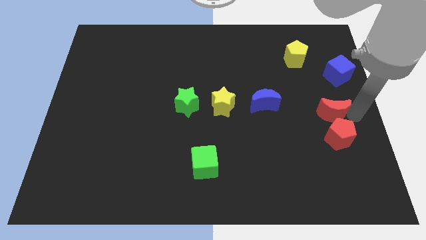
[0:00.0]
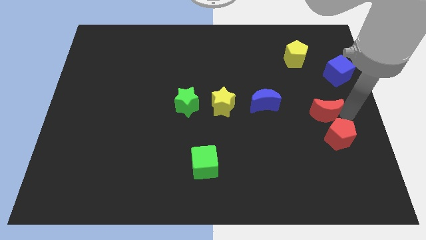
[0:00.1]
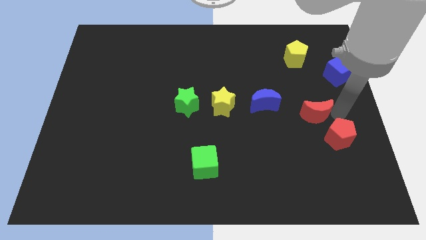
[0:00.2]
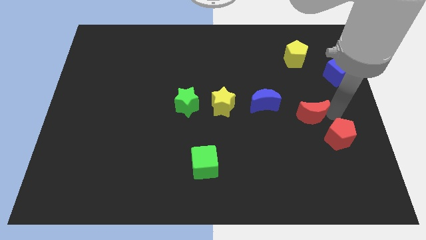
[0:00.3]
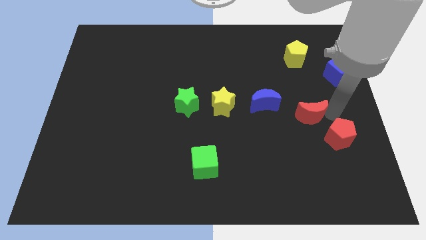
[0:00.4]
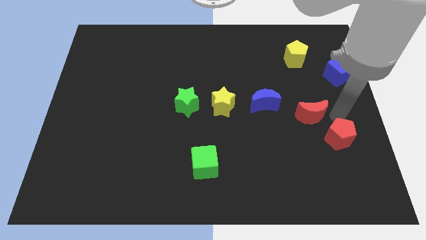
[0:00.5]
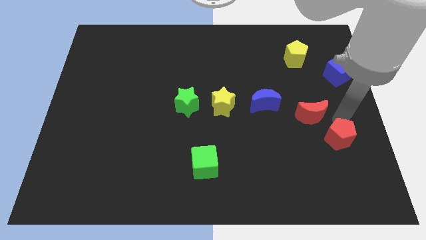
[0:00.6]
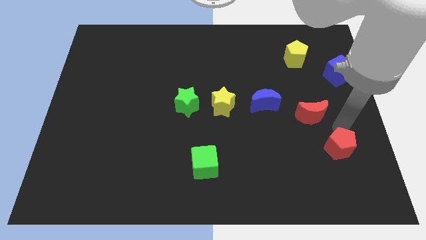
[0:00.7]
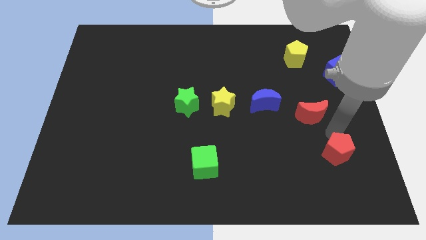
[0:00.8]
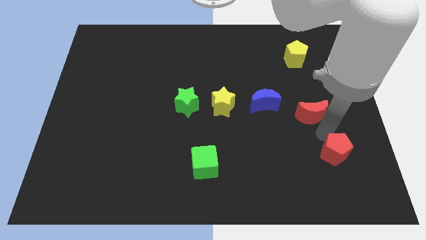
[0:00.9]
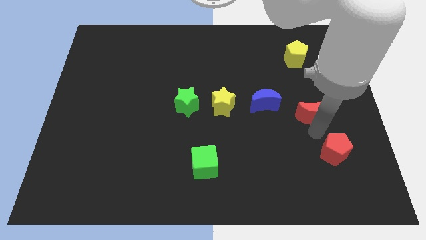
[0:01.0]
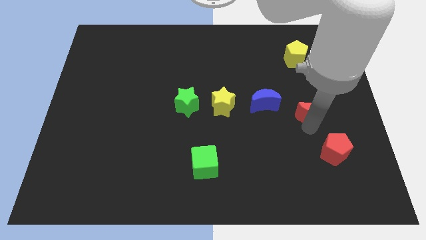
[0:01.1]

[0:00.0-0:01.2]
drag the red moon to the left

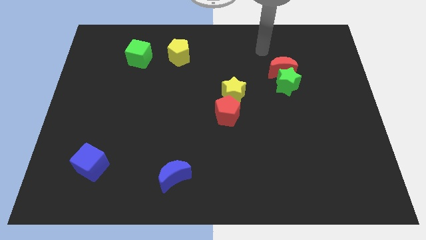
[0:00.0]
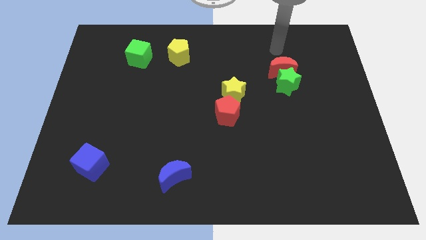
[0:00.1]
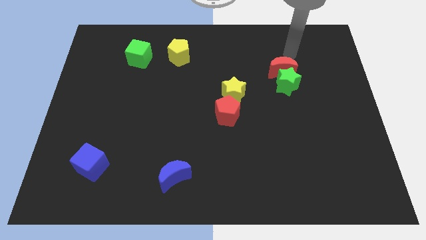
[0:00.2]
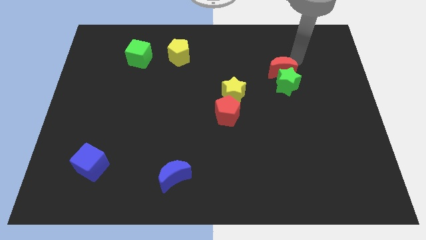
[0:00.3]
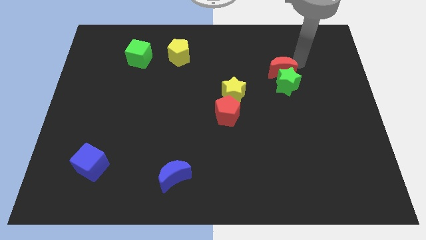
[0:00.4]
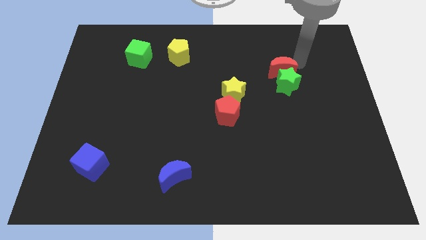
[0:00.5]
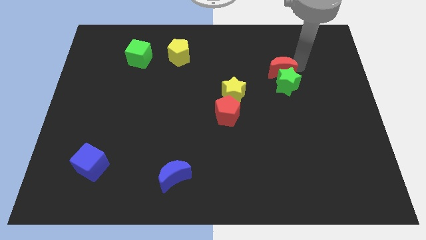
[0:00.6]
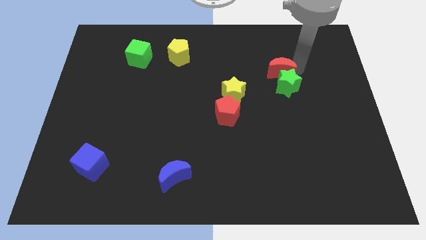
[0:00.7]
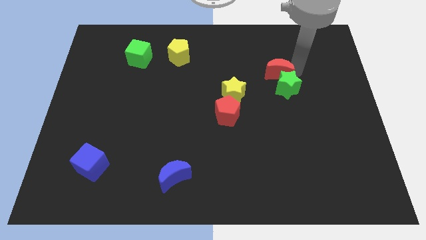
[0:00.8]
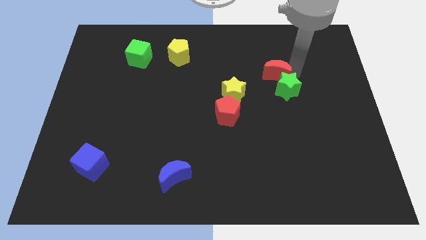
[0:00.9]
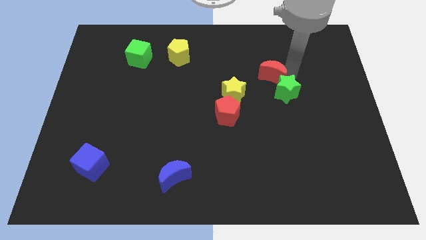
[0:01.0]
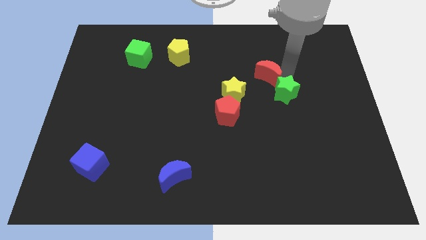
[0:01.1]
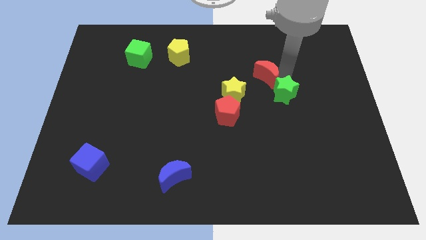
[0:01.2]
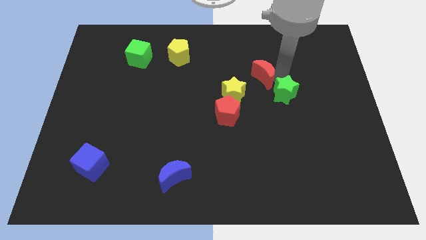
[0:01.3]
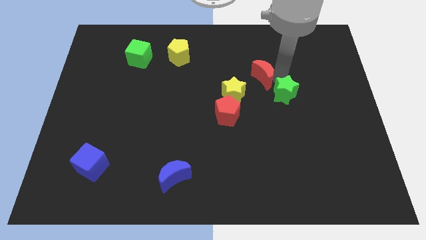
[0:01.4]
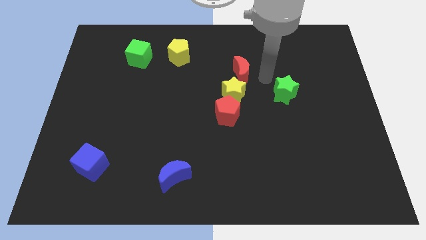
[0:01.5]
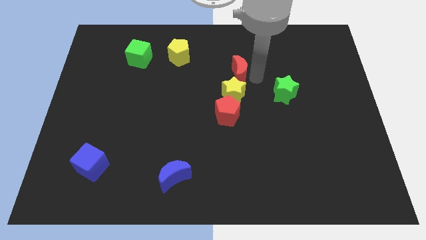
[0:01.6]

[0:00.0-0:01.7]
separate the red crescent and the green star

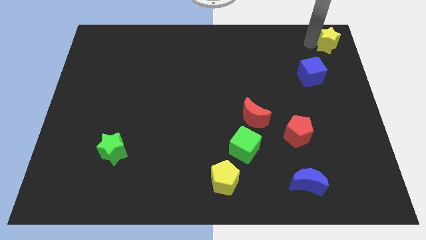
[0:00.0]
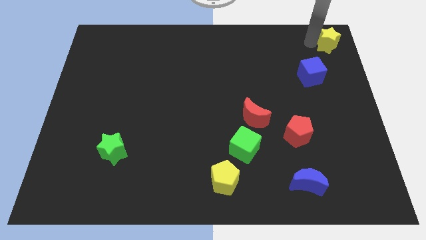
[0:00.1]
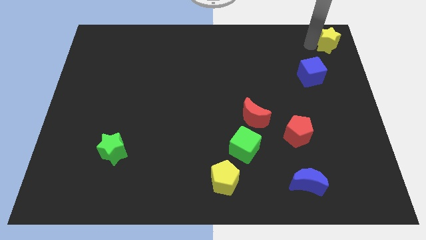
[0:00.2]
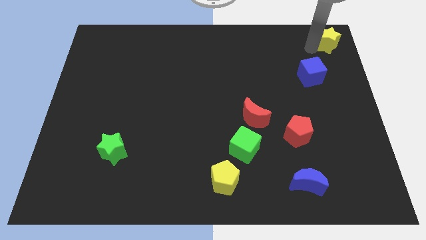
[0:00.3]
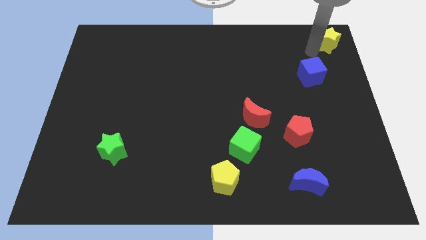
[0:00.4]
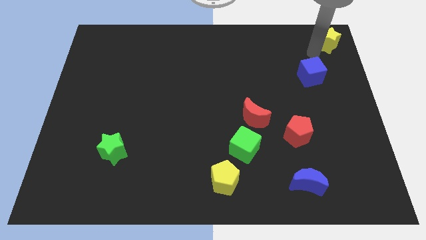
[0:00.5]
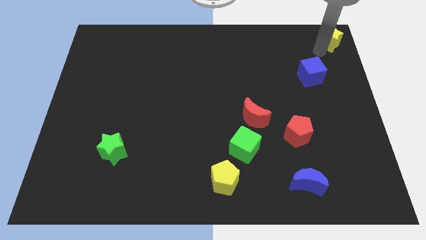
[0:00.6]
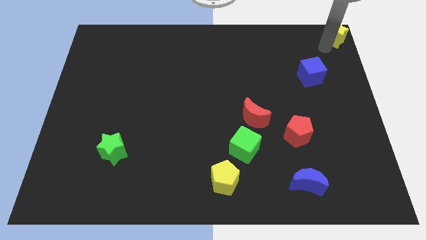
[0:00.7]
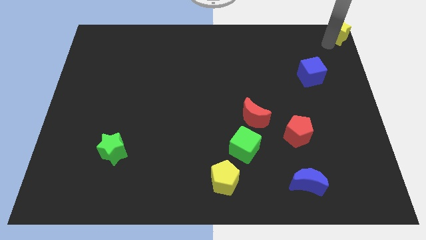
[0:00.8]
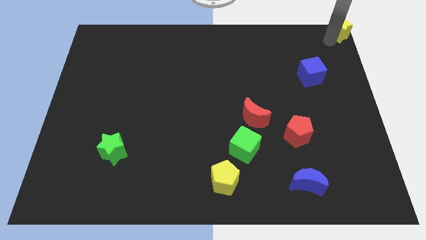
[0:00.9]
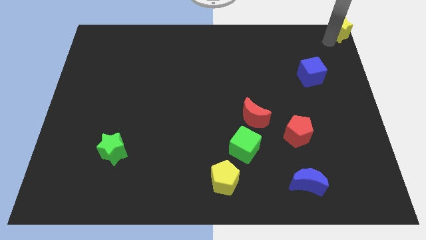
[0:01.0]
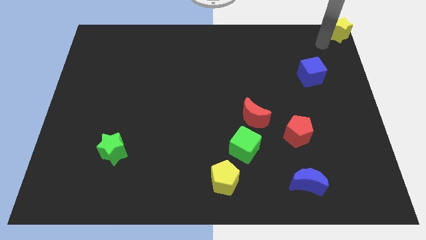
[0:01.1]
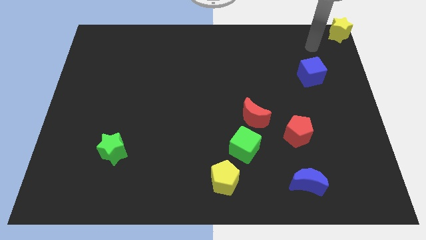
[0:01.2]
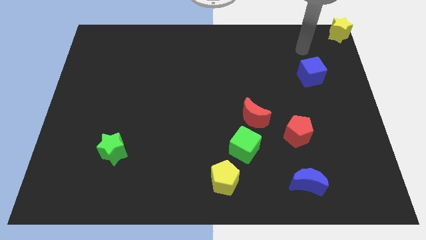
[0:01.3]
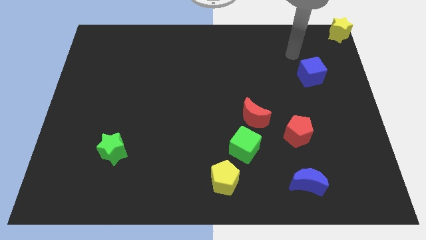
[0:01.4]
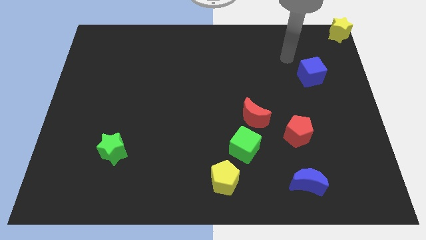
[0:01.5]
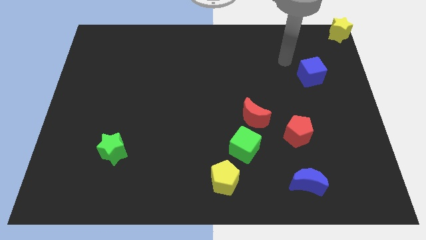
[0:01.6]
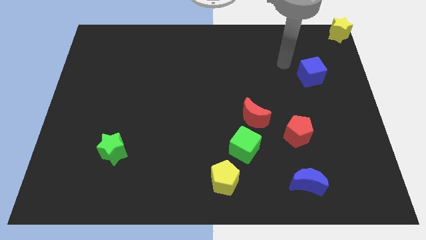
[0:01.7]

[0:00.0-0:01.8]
place yellow star to complete right corner

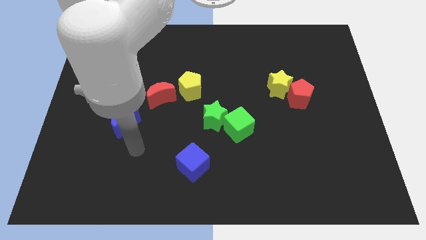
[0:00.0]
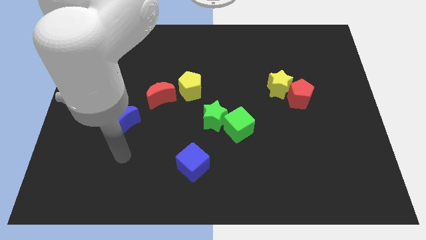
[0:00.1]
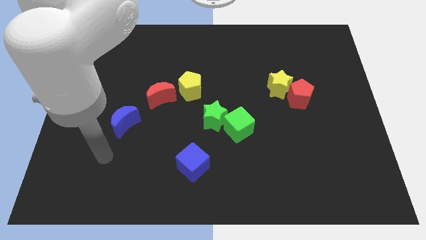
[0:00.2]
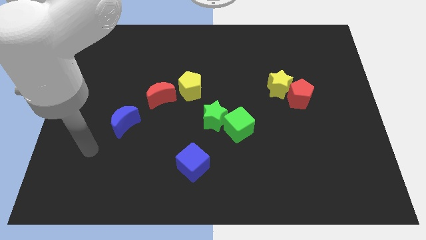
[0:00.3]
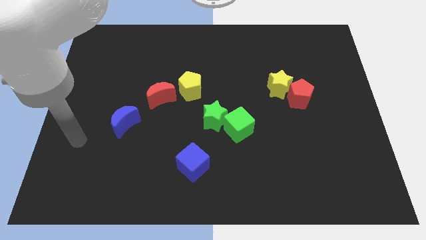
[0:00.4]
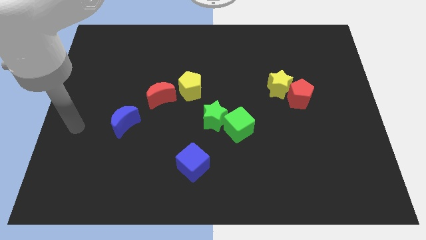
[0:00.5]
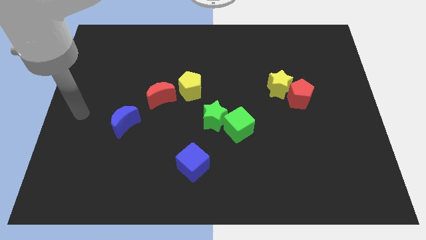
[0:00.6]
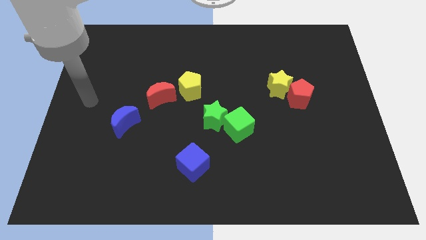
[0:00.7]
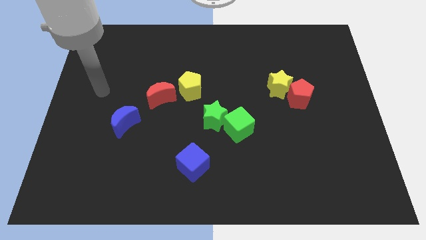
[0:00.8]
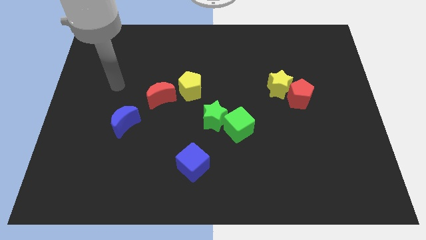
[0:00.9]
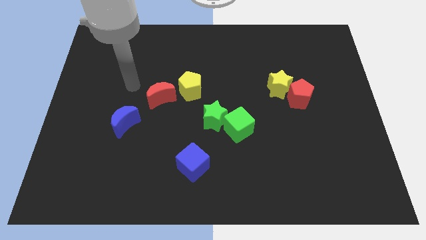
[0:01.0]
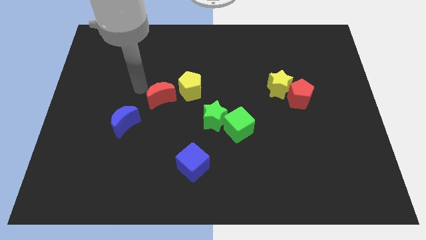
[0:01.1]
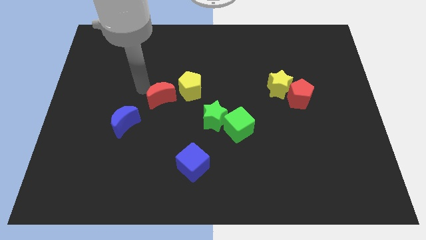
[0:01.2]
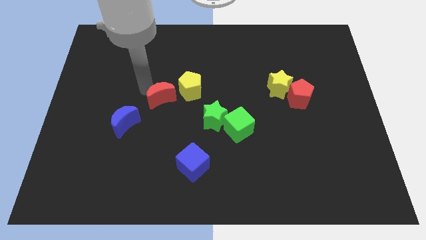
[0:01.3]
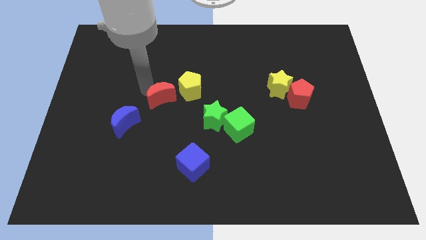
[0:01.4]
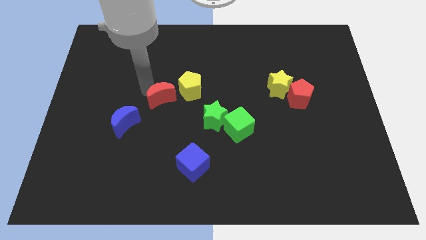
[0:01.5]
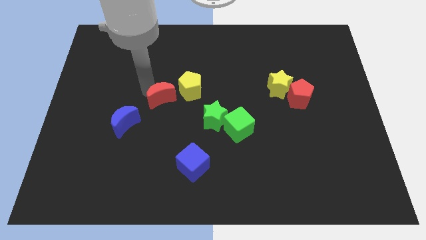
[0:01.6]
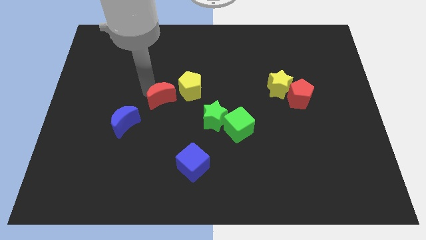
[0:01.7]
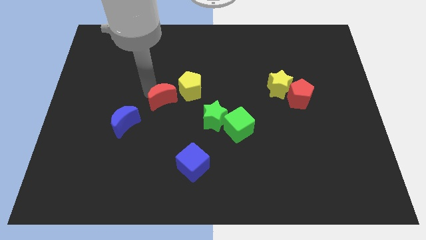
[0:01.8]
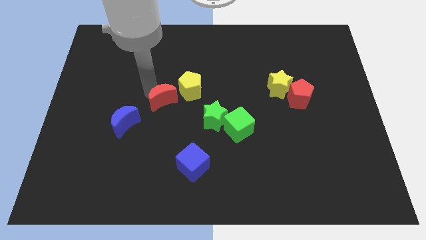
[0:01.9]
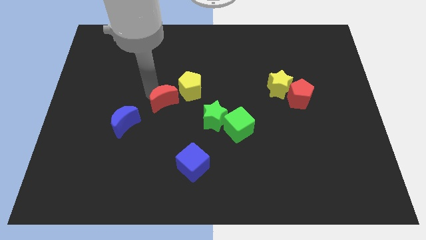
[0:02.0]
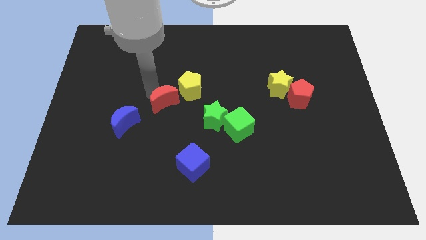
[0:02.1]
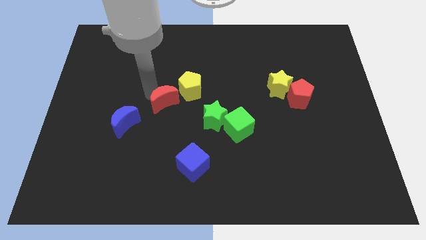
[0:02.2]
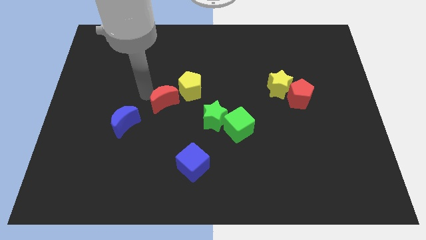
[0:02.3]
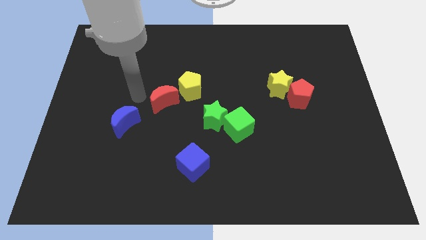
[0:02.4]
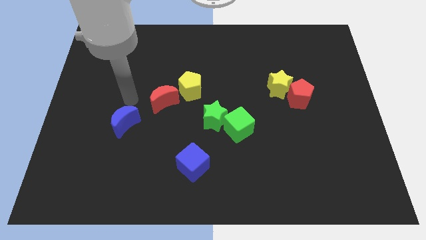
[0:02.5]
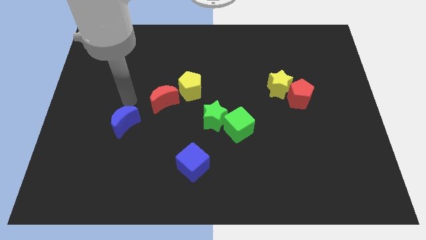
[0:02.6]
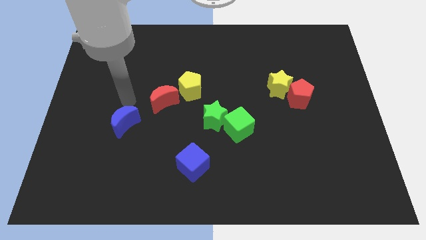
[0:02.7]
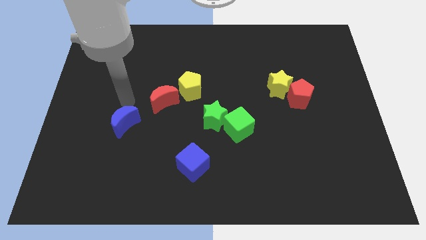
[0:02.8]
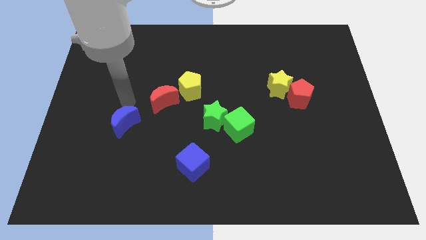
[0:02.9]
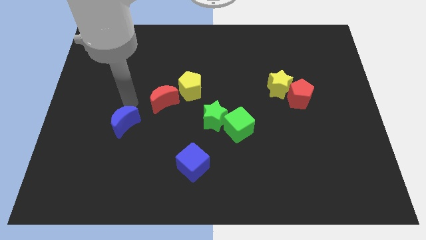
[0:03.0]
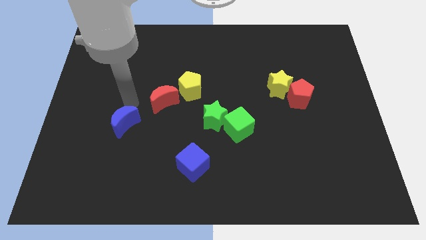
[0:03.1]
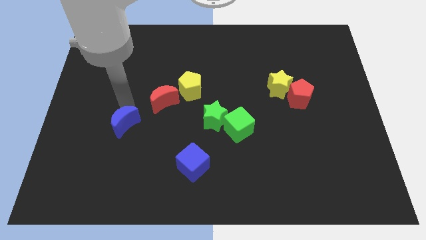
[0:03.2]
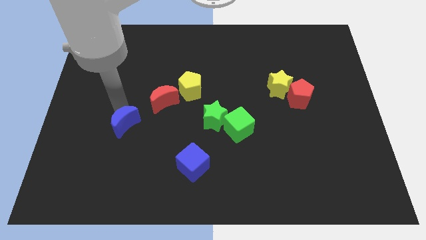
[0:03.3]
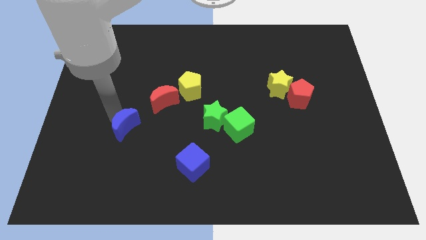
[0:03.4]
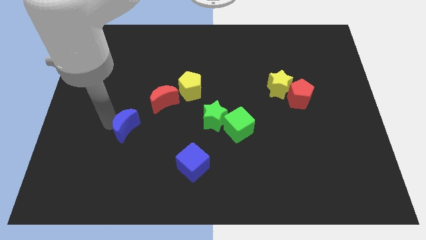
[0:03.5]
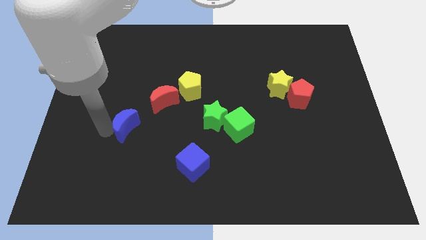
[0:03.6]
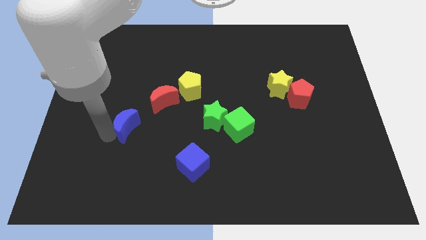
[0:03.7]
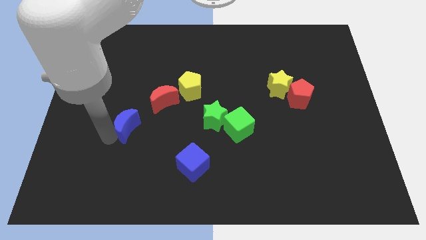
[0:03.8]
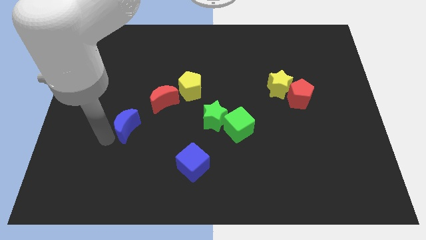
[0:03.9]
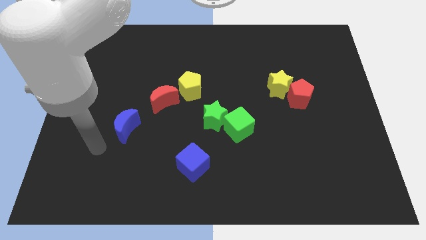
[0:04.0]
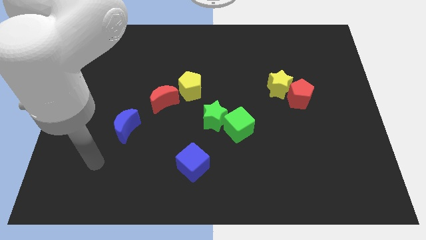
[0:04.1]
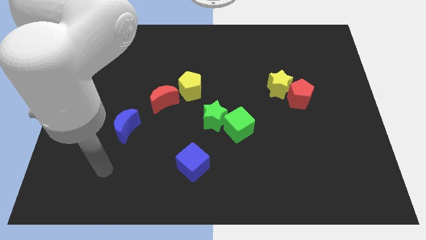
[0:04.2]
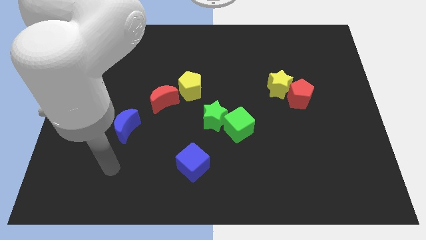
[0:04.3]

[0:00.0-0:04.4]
push red crescent and blue crescent slightly to the bottom right side of the board

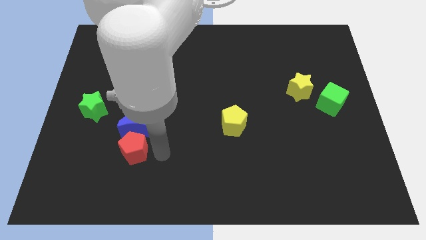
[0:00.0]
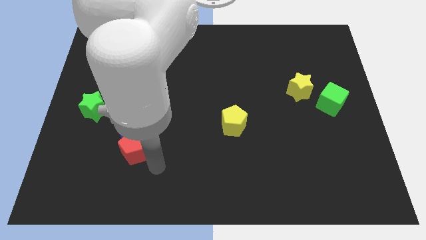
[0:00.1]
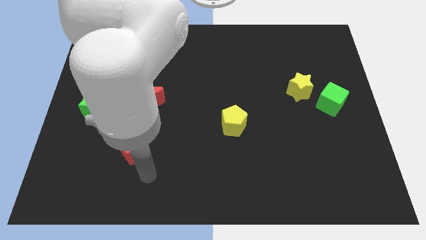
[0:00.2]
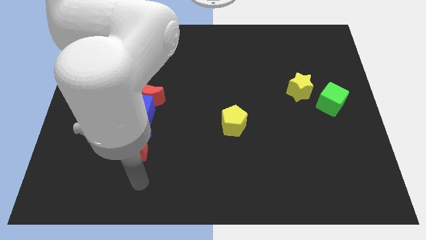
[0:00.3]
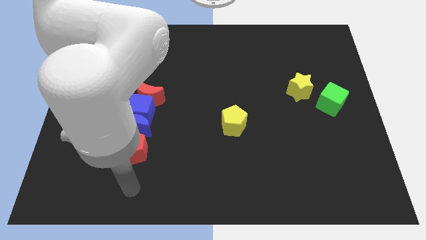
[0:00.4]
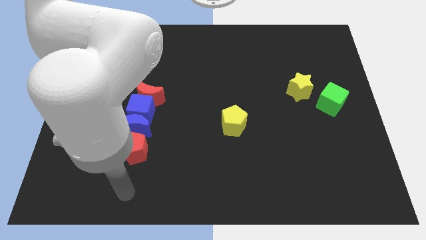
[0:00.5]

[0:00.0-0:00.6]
move your arm below the red pentagon
